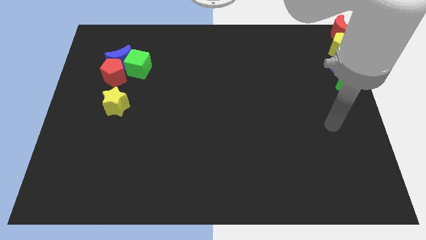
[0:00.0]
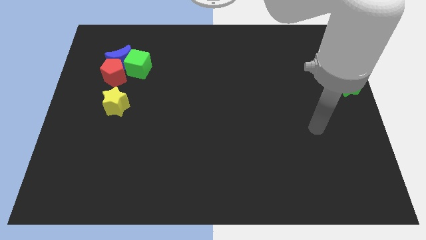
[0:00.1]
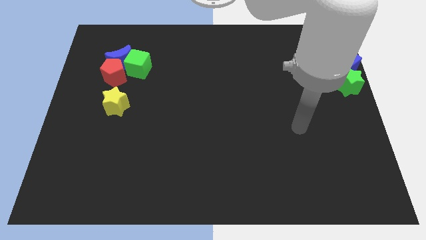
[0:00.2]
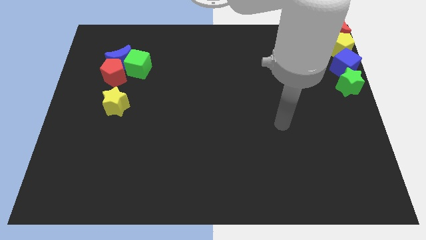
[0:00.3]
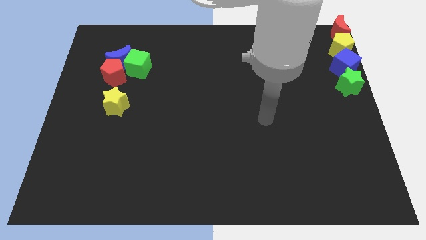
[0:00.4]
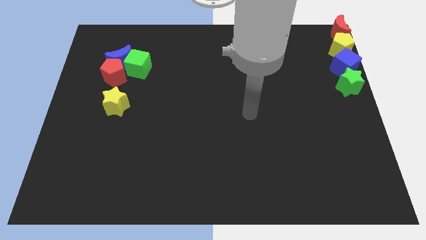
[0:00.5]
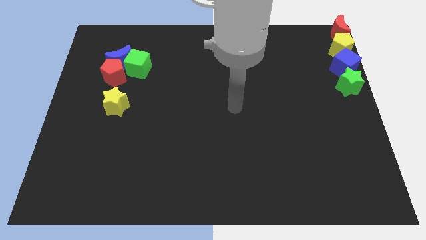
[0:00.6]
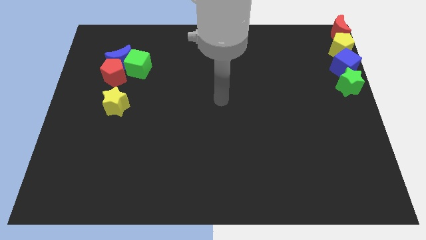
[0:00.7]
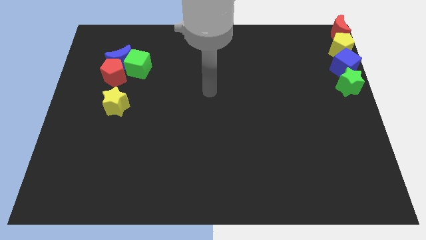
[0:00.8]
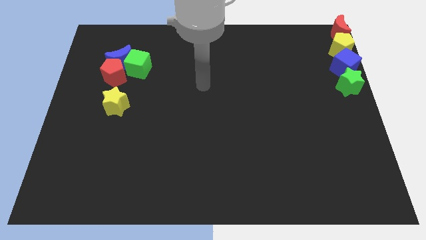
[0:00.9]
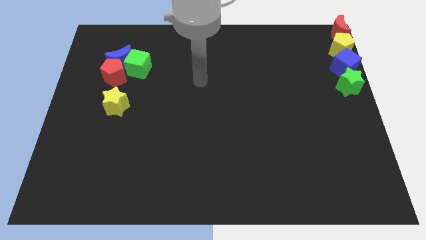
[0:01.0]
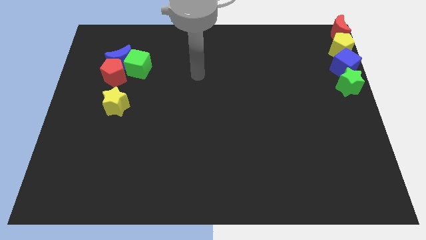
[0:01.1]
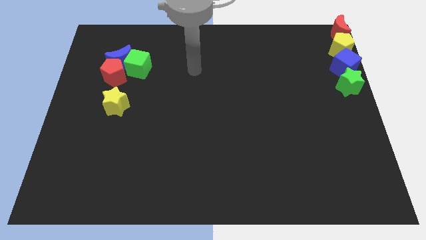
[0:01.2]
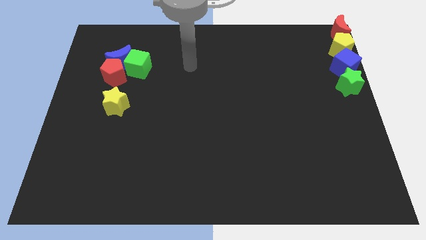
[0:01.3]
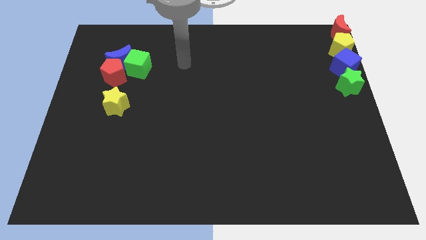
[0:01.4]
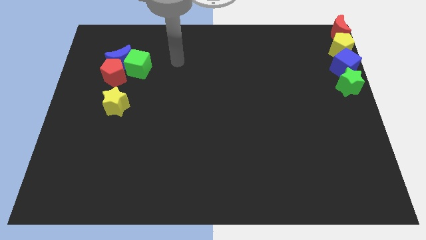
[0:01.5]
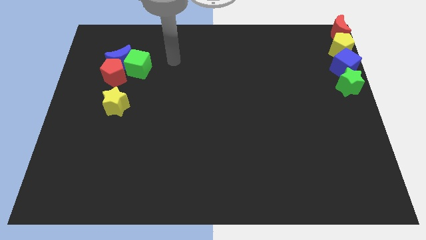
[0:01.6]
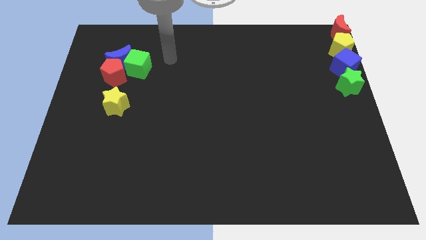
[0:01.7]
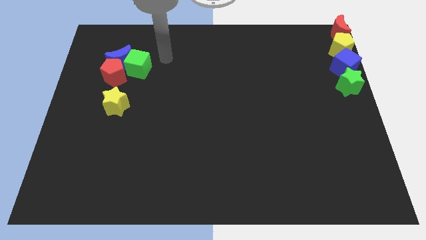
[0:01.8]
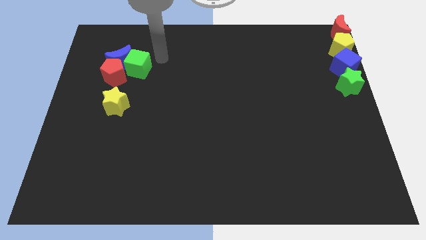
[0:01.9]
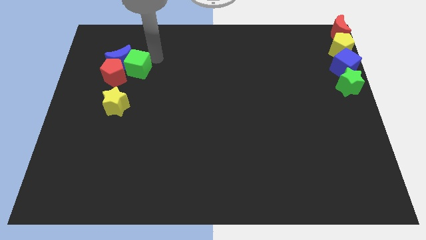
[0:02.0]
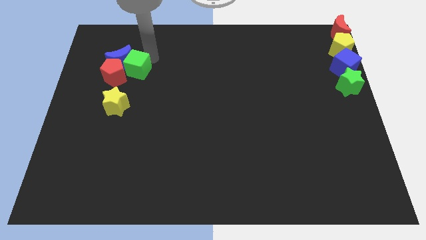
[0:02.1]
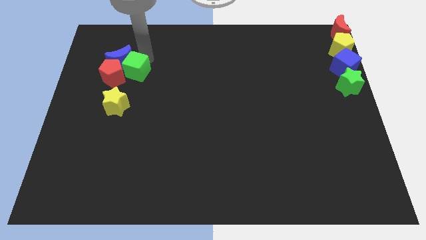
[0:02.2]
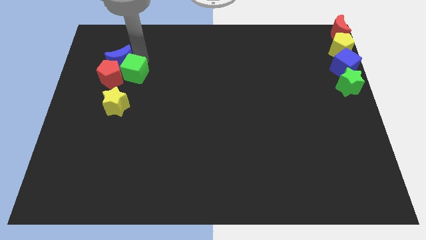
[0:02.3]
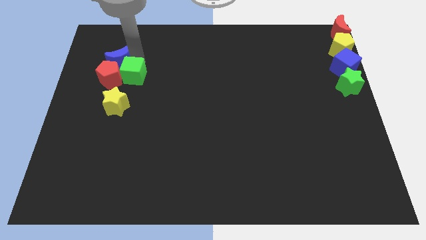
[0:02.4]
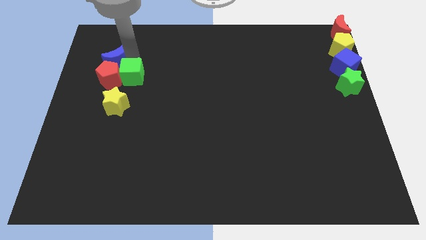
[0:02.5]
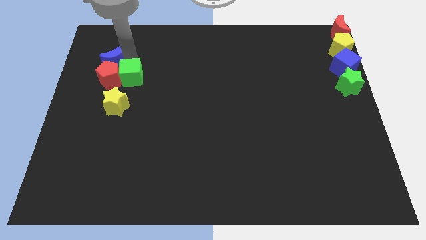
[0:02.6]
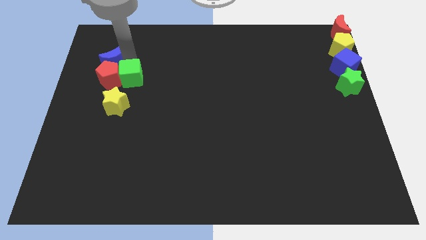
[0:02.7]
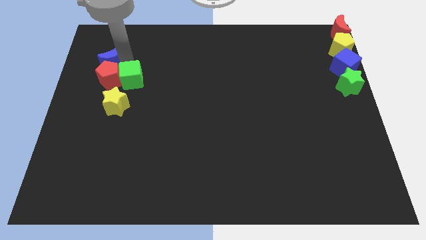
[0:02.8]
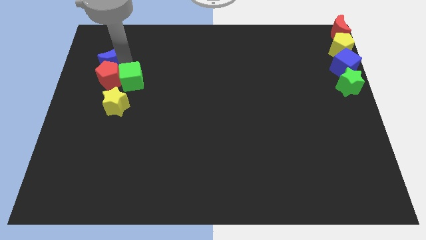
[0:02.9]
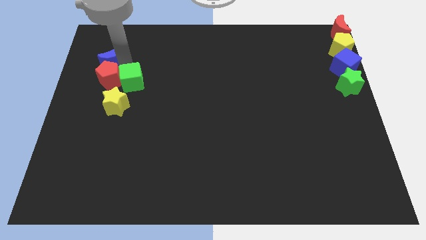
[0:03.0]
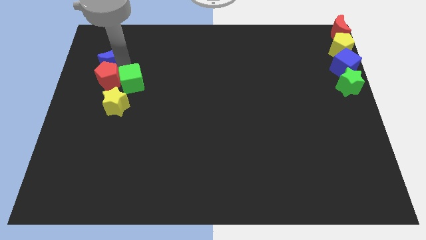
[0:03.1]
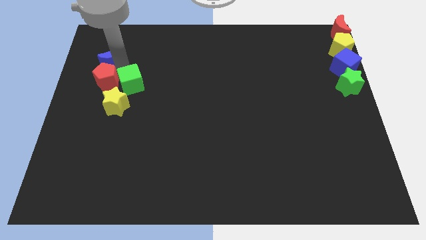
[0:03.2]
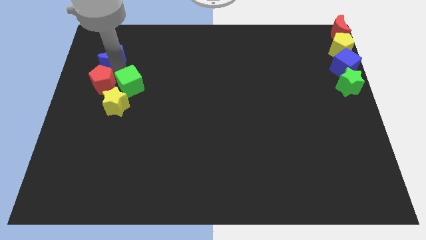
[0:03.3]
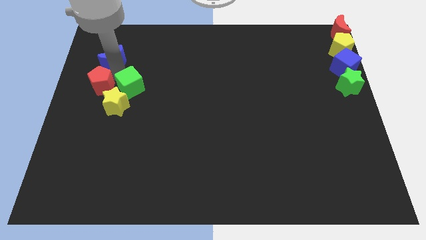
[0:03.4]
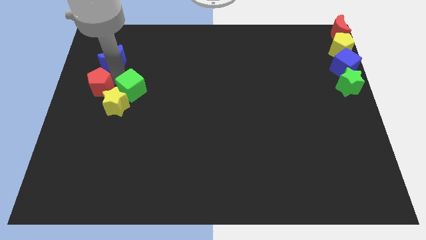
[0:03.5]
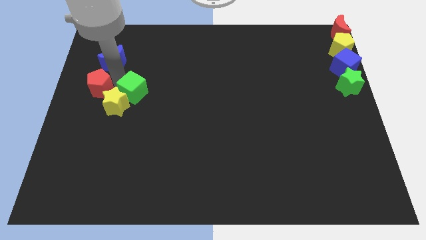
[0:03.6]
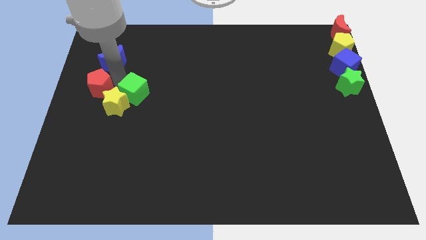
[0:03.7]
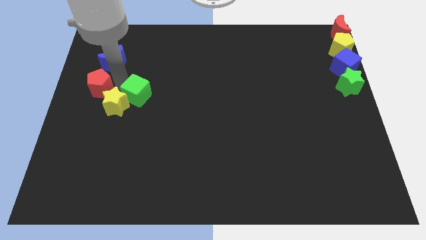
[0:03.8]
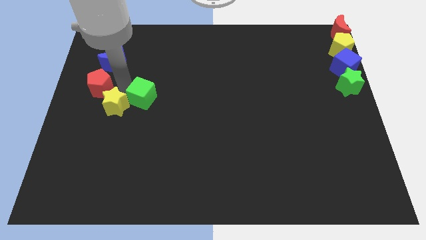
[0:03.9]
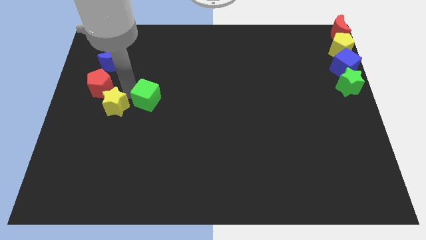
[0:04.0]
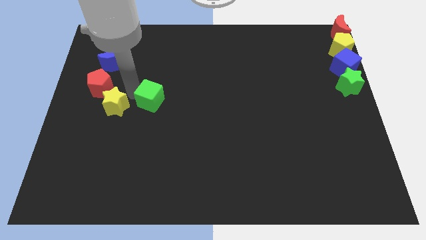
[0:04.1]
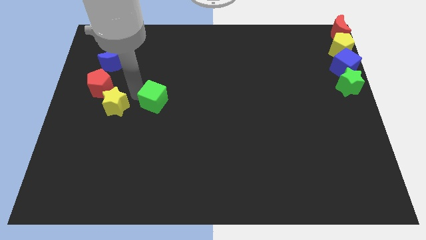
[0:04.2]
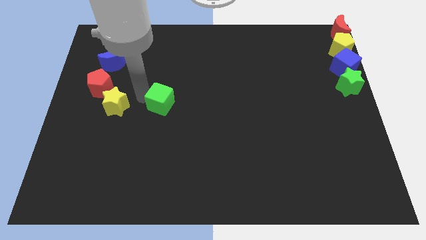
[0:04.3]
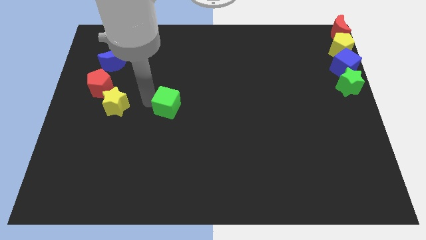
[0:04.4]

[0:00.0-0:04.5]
separate the green cube from the red pentagon

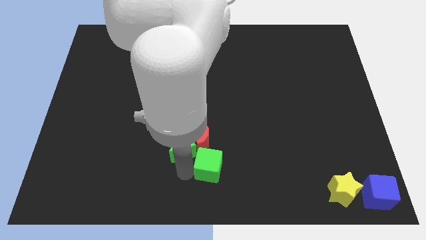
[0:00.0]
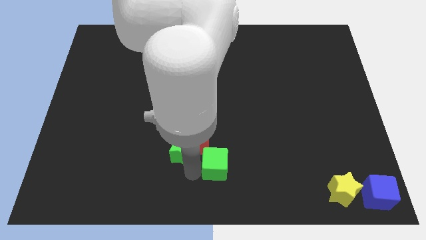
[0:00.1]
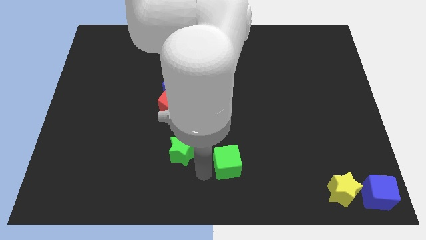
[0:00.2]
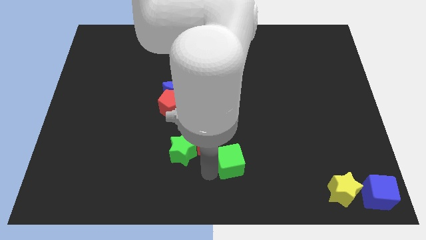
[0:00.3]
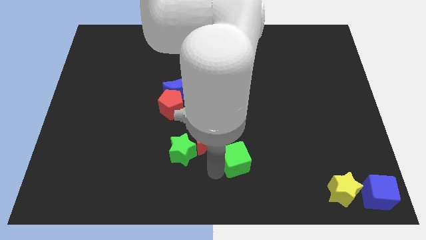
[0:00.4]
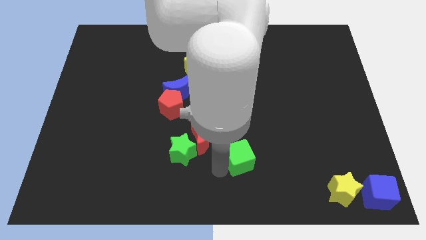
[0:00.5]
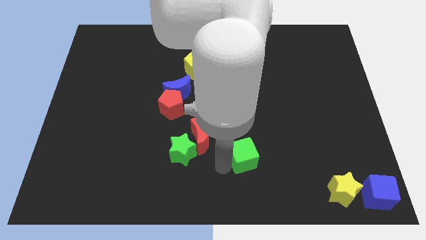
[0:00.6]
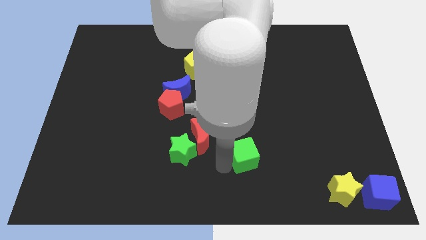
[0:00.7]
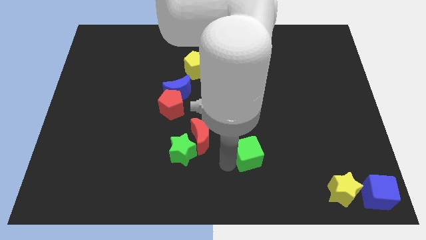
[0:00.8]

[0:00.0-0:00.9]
move the green cube slightly to the right

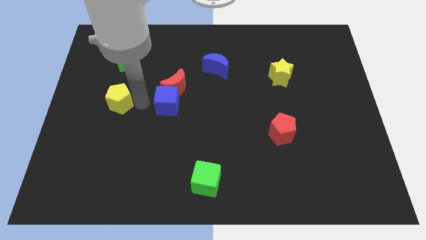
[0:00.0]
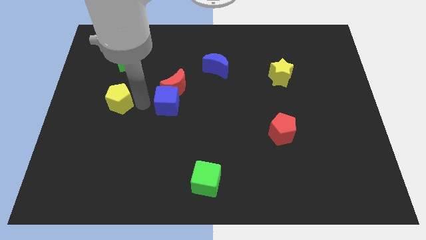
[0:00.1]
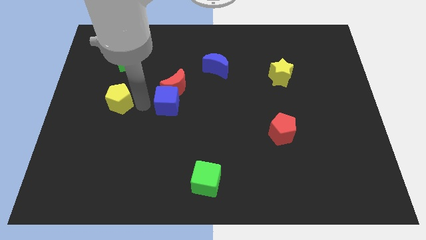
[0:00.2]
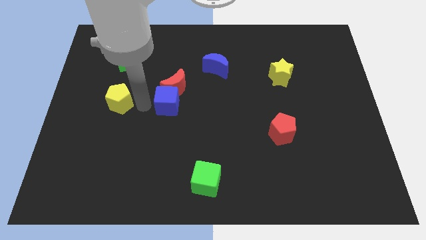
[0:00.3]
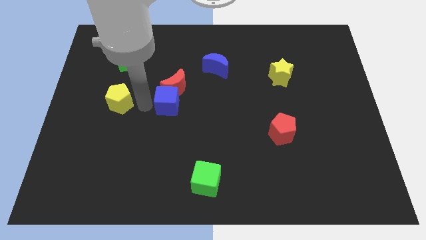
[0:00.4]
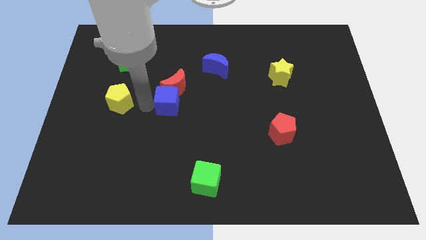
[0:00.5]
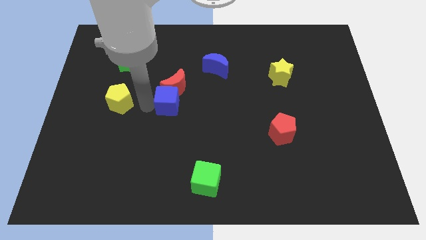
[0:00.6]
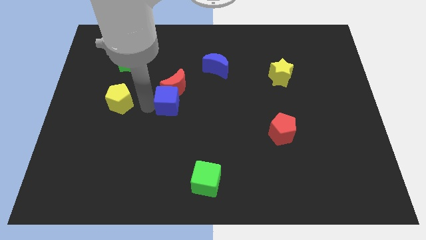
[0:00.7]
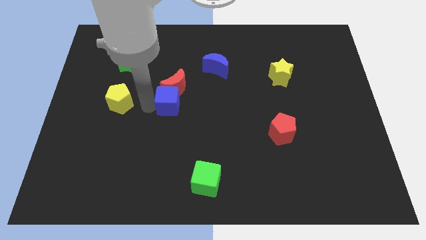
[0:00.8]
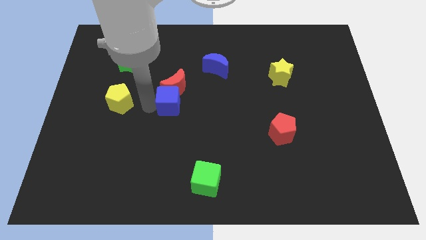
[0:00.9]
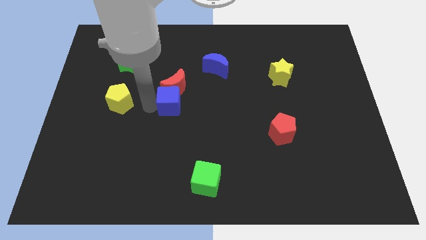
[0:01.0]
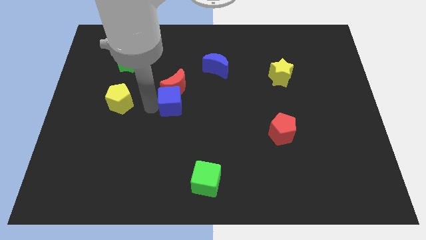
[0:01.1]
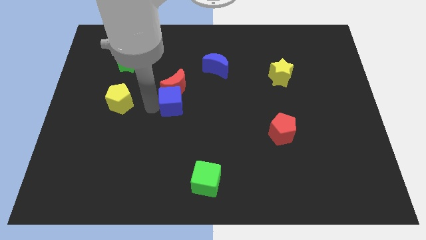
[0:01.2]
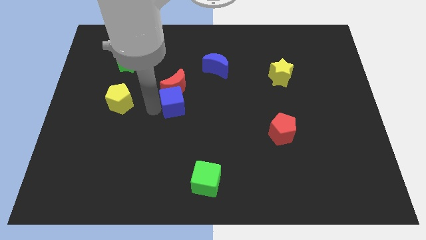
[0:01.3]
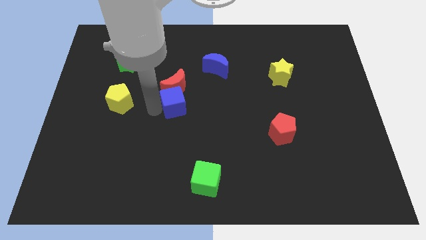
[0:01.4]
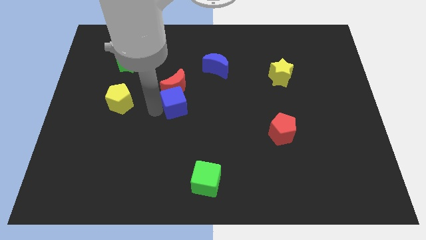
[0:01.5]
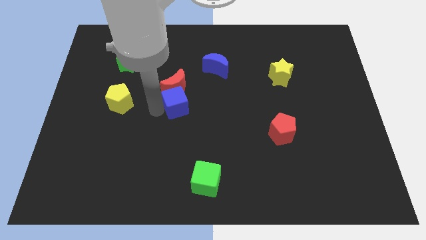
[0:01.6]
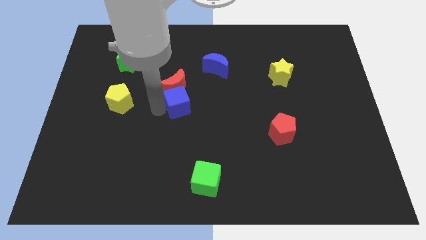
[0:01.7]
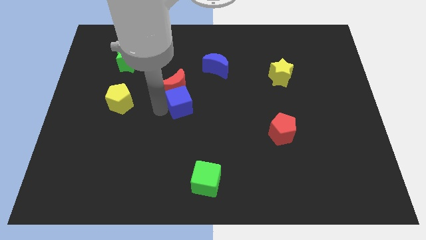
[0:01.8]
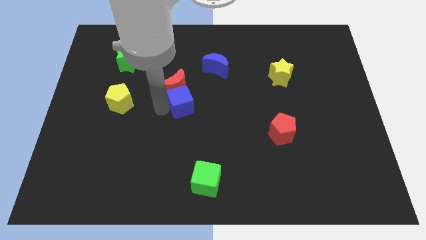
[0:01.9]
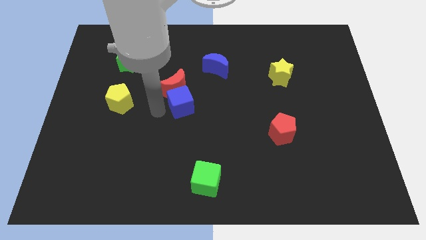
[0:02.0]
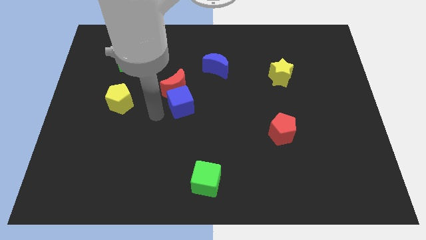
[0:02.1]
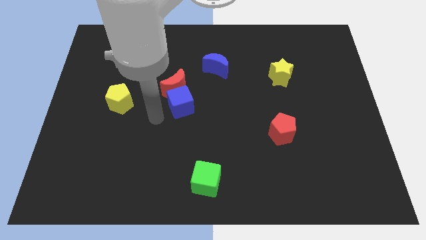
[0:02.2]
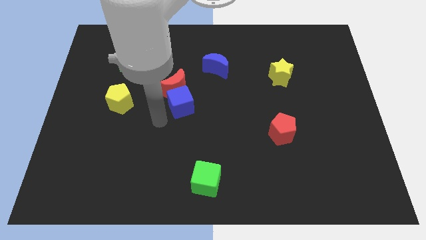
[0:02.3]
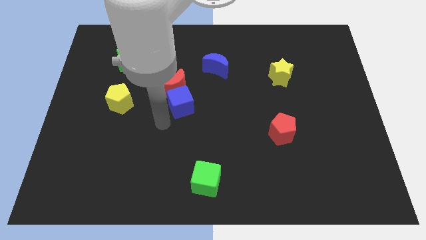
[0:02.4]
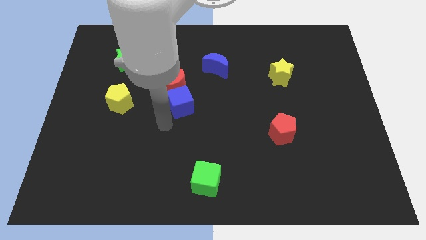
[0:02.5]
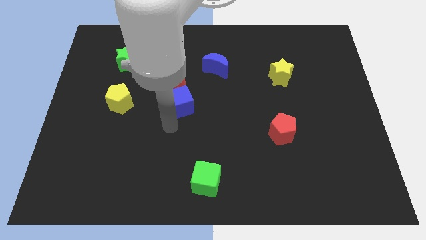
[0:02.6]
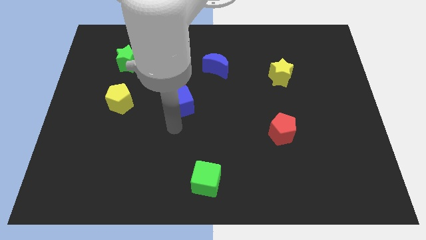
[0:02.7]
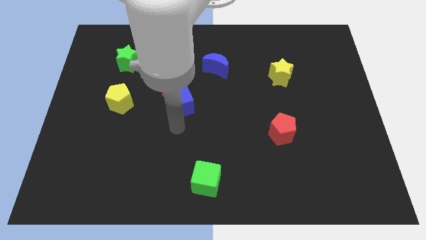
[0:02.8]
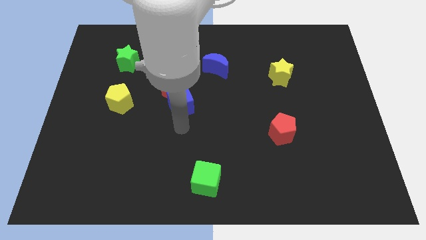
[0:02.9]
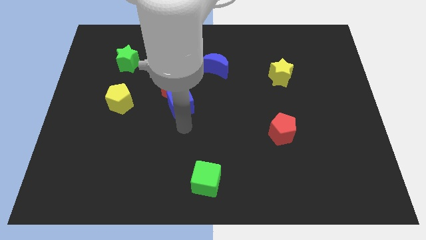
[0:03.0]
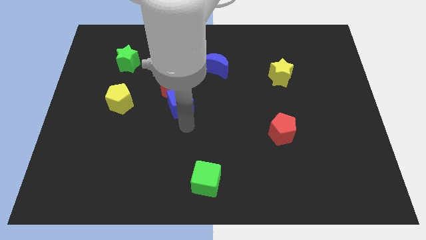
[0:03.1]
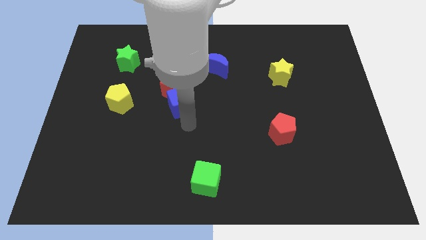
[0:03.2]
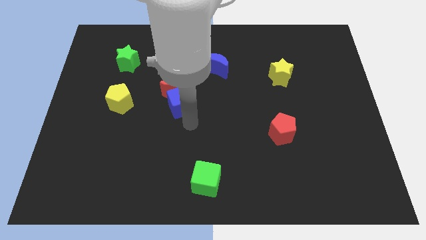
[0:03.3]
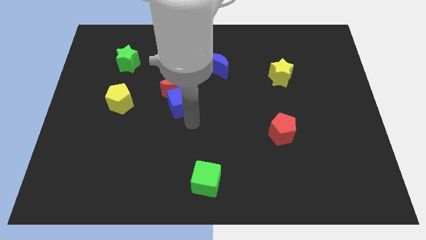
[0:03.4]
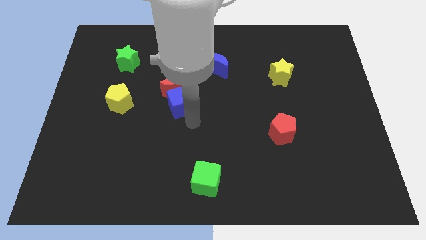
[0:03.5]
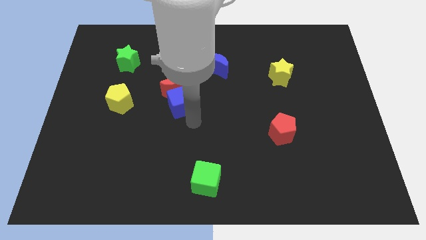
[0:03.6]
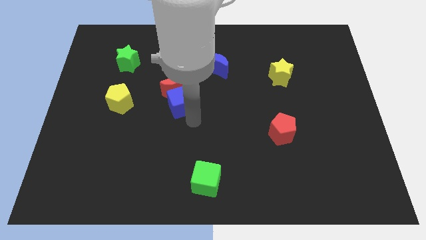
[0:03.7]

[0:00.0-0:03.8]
push the blue cube slightly to the right
